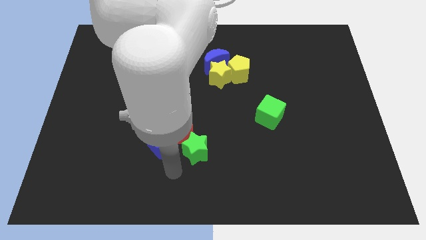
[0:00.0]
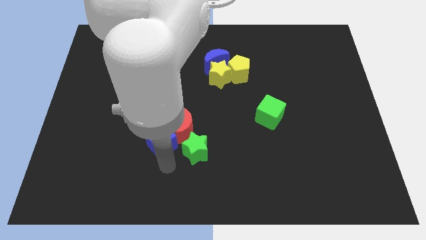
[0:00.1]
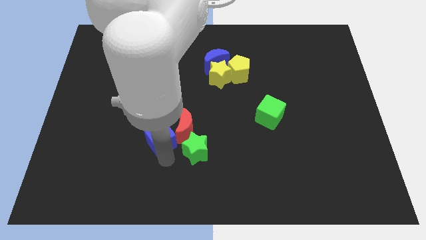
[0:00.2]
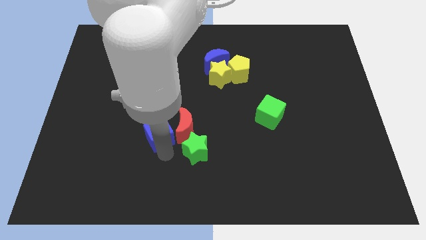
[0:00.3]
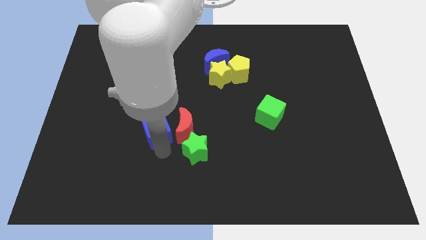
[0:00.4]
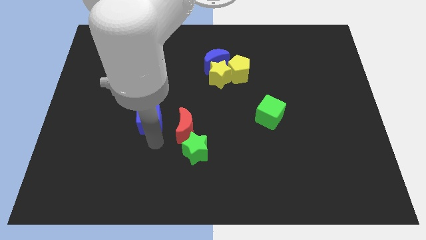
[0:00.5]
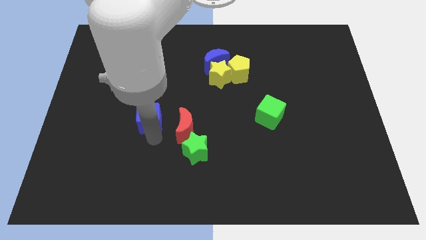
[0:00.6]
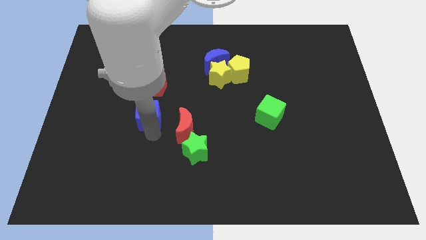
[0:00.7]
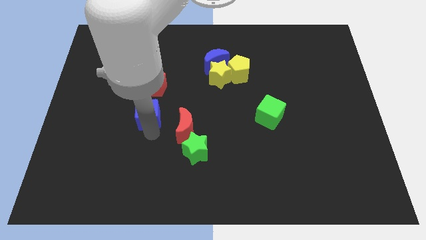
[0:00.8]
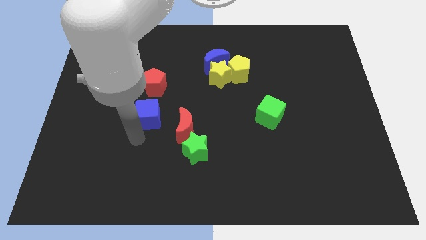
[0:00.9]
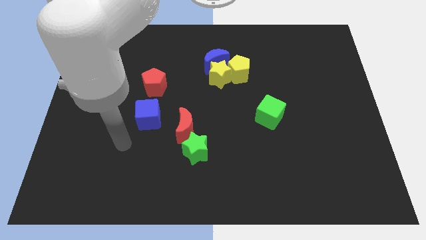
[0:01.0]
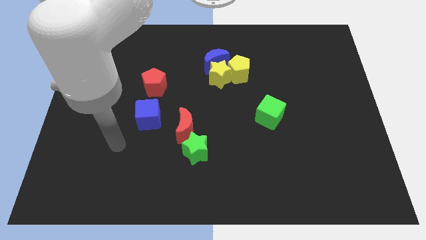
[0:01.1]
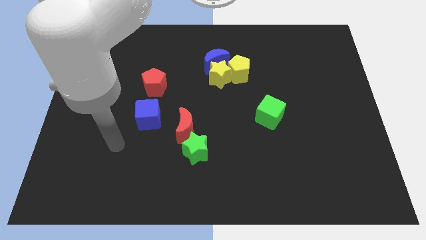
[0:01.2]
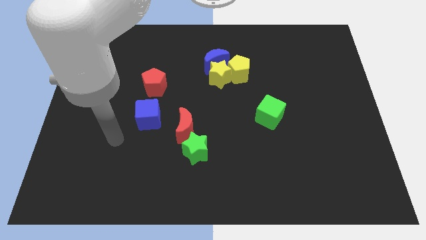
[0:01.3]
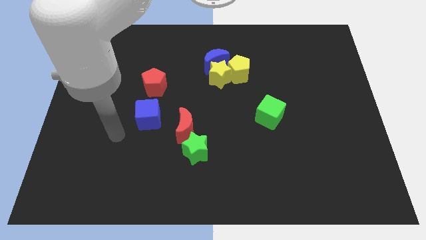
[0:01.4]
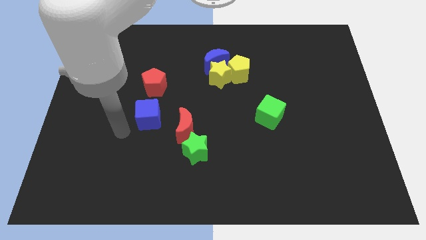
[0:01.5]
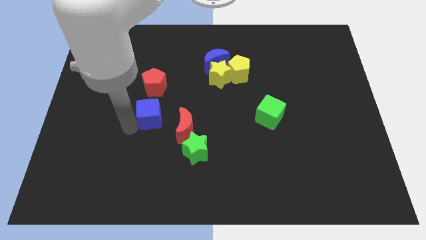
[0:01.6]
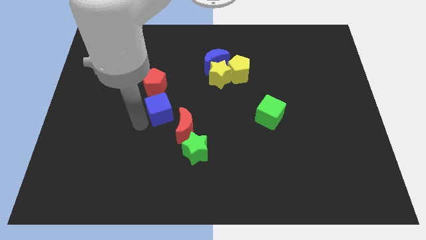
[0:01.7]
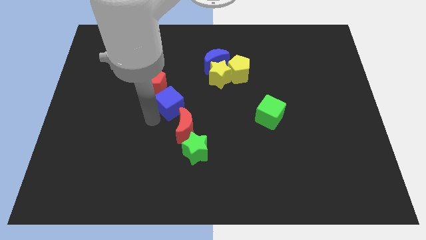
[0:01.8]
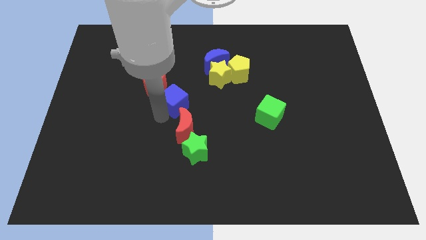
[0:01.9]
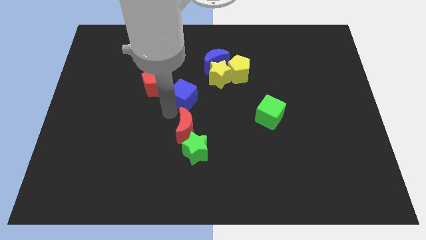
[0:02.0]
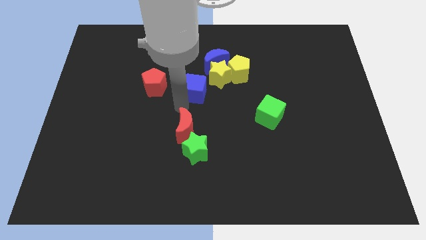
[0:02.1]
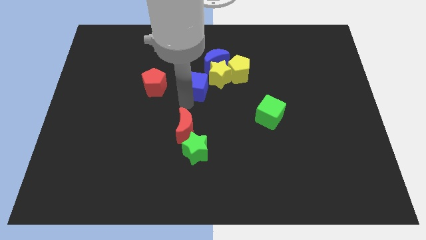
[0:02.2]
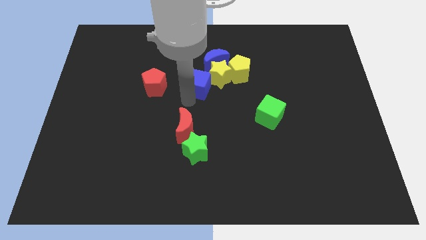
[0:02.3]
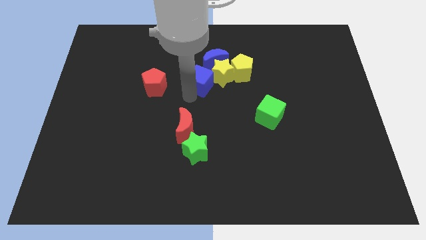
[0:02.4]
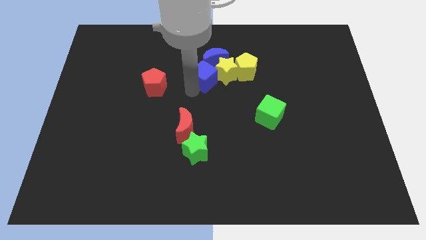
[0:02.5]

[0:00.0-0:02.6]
move the blue cube into the yellow star to the left diagonally

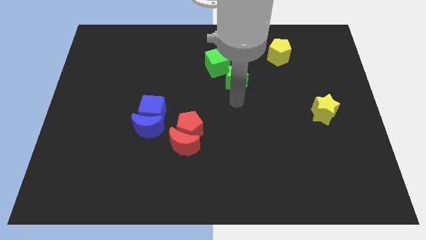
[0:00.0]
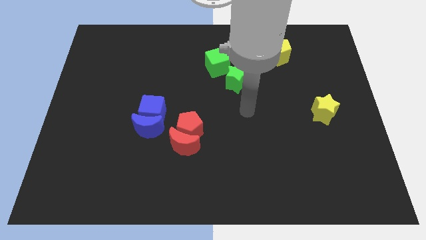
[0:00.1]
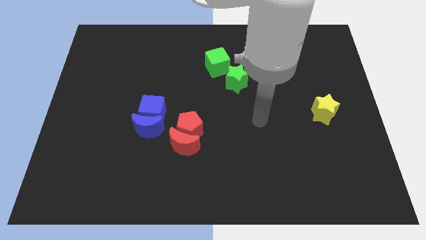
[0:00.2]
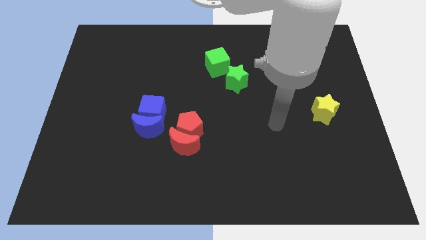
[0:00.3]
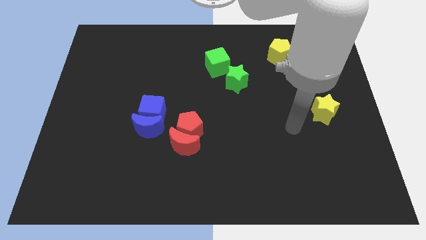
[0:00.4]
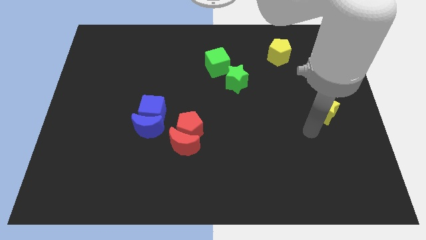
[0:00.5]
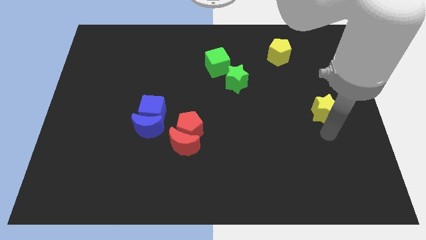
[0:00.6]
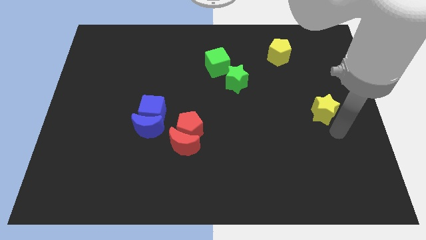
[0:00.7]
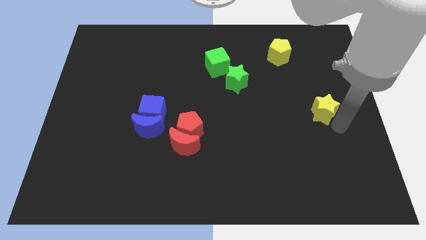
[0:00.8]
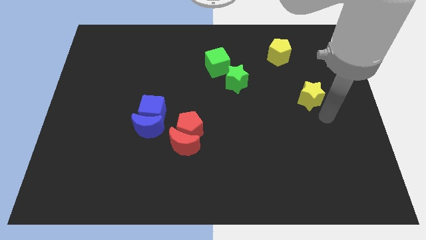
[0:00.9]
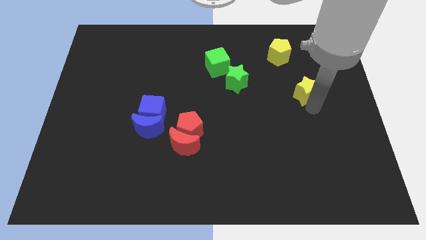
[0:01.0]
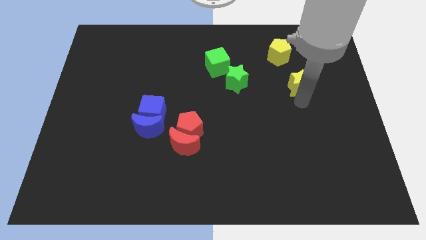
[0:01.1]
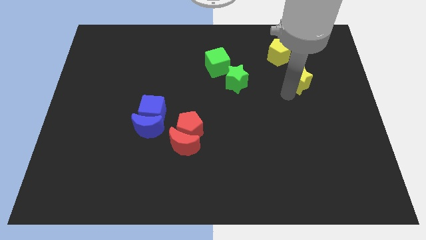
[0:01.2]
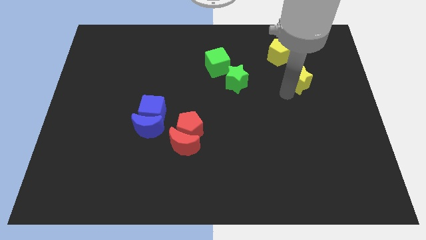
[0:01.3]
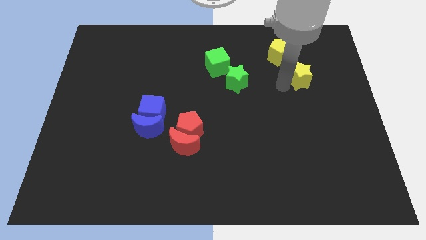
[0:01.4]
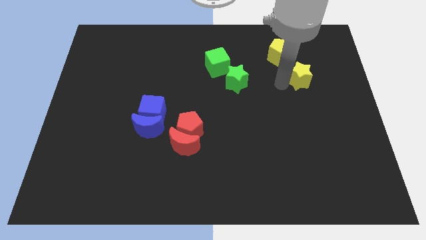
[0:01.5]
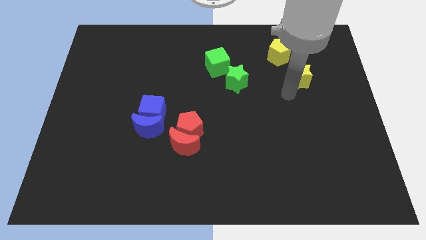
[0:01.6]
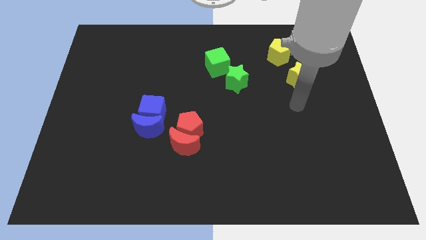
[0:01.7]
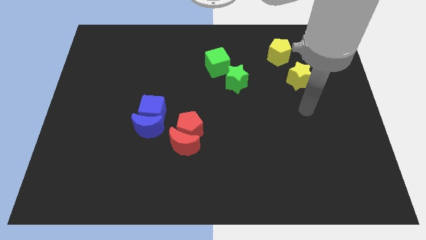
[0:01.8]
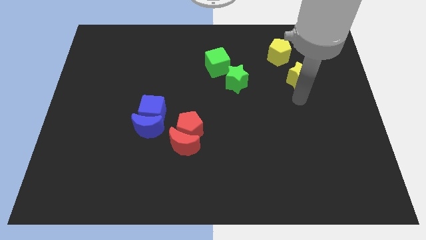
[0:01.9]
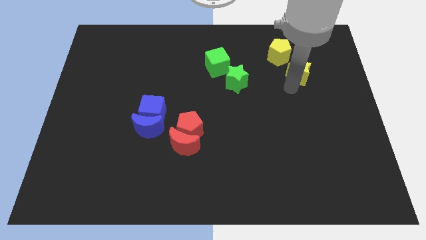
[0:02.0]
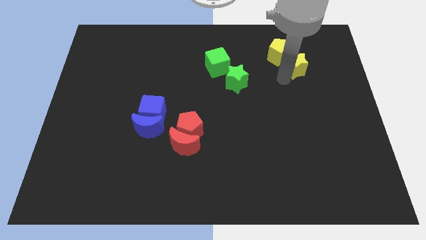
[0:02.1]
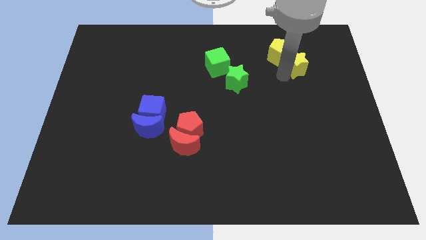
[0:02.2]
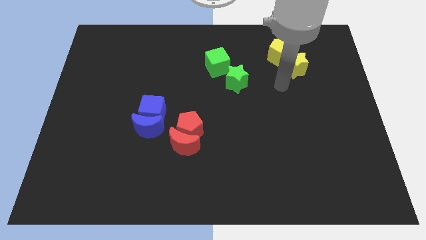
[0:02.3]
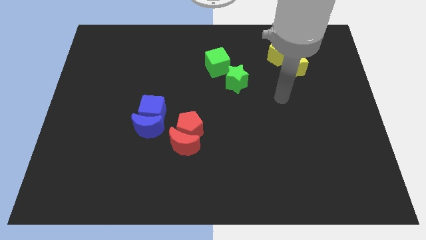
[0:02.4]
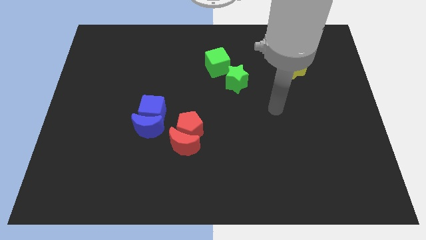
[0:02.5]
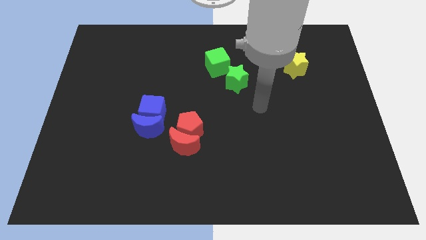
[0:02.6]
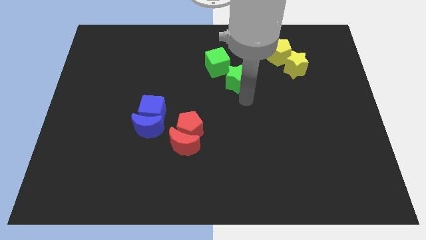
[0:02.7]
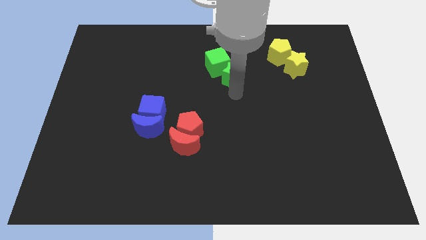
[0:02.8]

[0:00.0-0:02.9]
move the yellow star close to the yellow pentagon

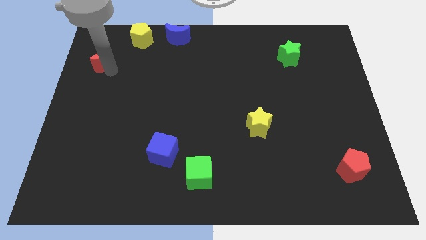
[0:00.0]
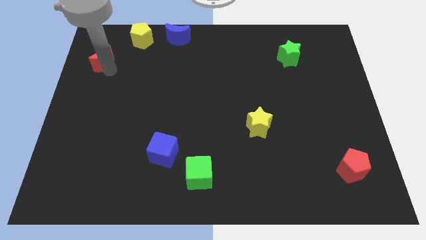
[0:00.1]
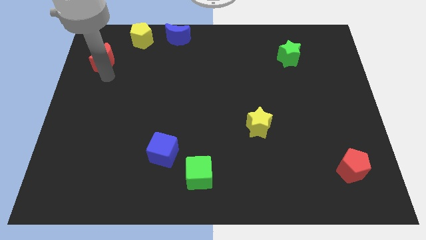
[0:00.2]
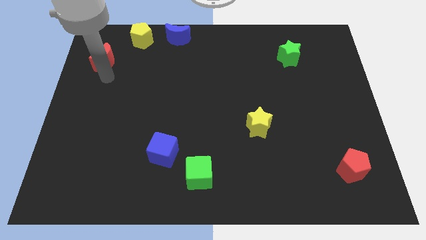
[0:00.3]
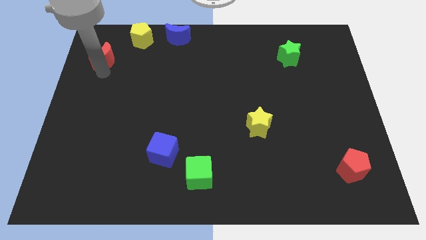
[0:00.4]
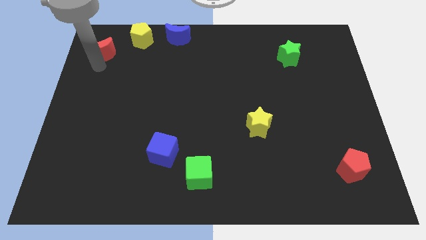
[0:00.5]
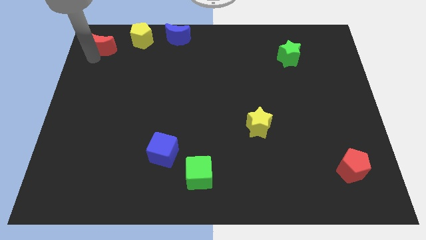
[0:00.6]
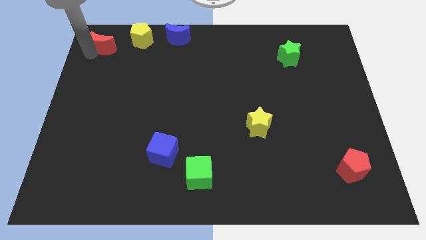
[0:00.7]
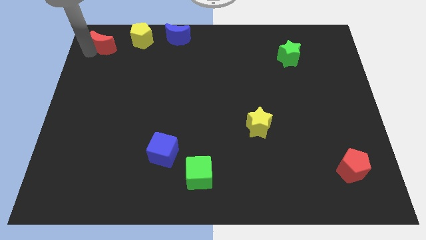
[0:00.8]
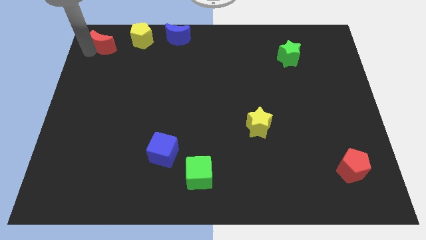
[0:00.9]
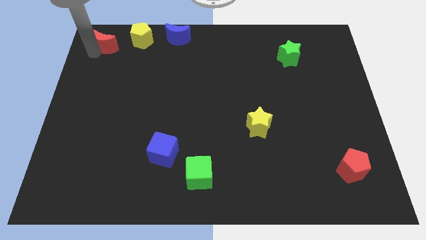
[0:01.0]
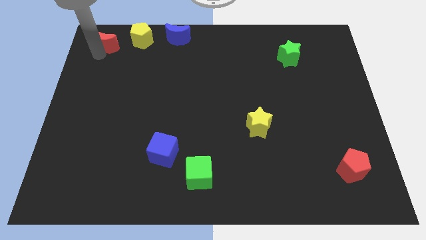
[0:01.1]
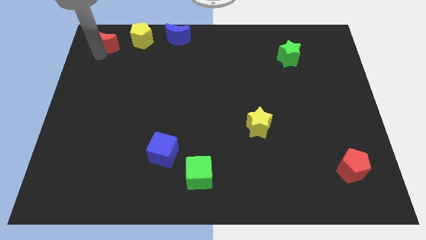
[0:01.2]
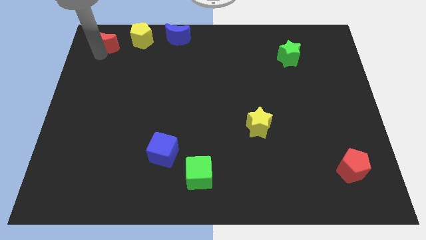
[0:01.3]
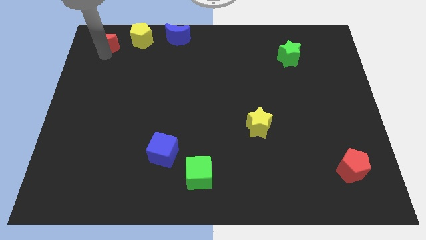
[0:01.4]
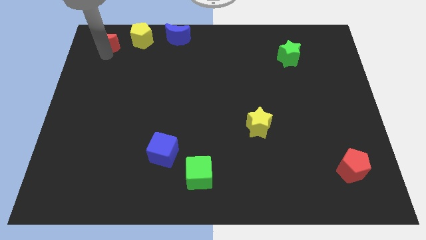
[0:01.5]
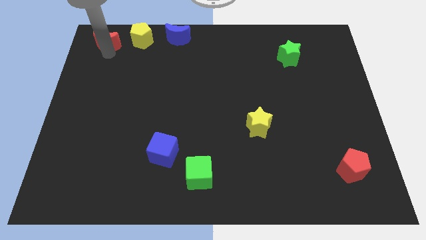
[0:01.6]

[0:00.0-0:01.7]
place the red crescent left side of yellow pentagon

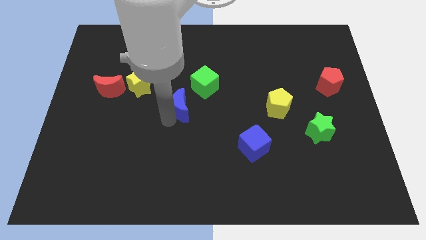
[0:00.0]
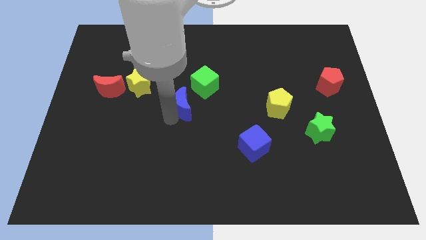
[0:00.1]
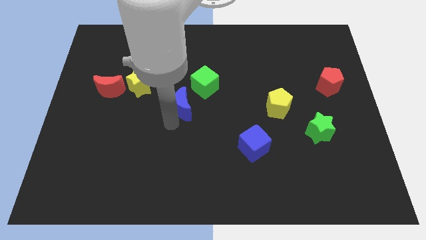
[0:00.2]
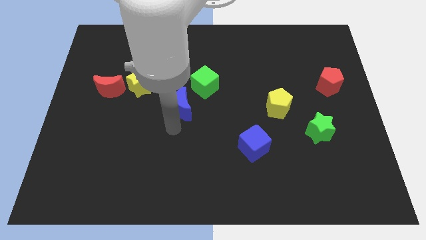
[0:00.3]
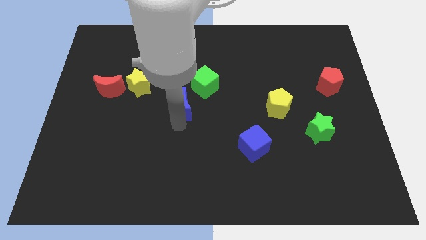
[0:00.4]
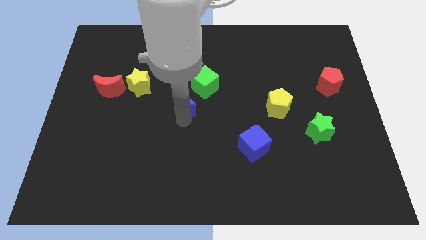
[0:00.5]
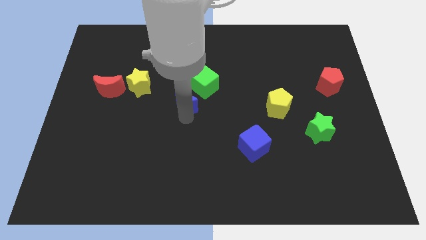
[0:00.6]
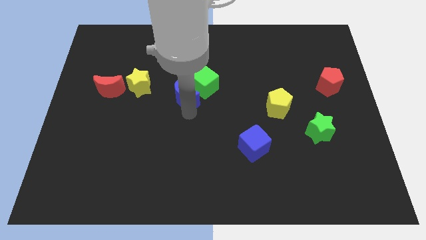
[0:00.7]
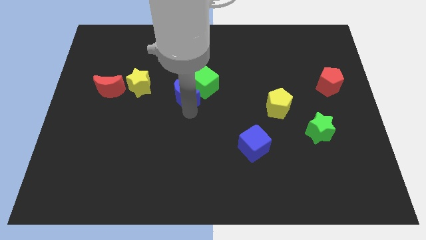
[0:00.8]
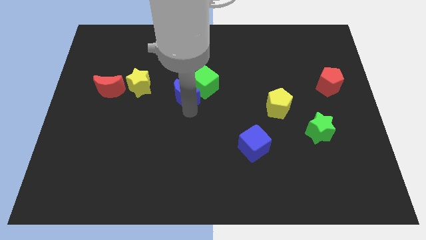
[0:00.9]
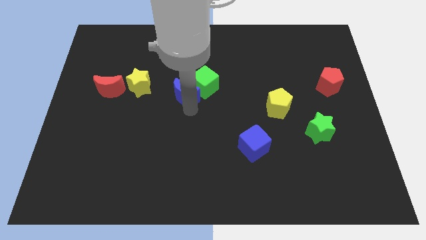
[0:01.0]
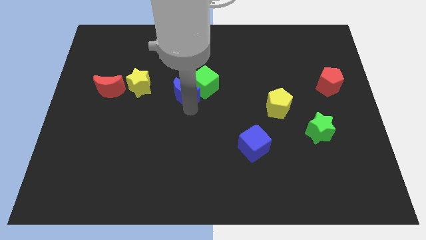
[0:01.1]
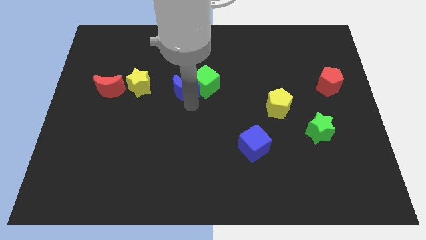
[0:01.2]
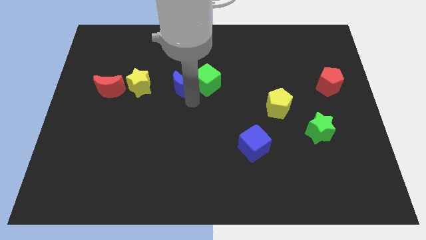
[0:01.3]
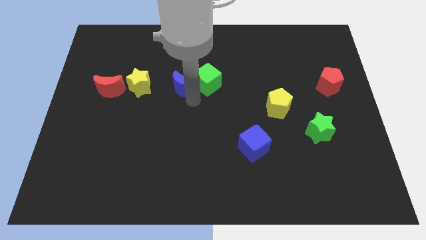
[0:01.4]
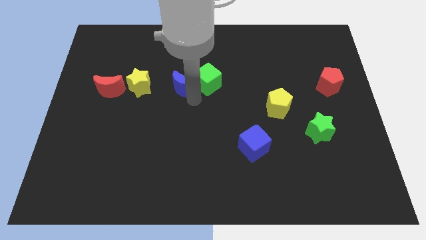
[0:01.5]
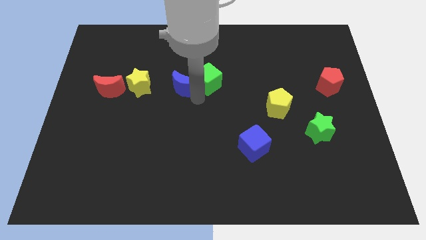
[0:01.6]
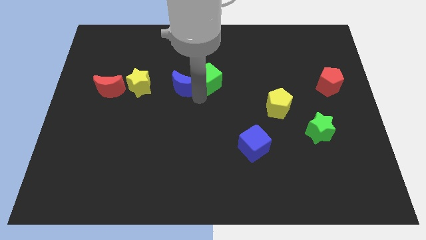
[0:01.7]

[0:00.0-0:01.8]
push the blue crescent into the green cube
